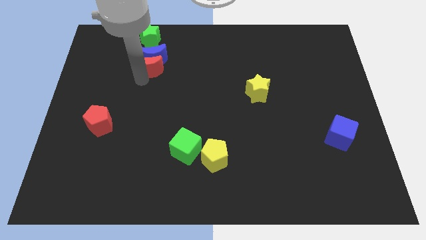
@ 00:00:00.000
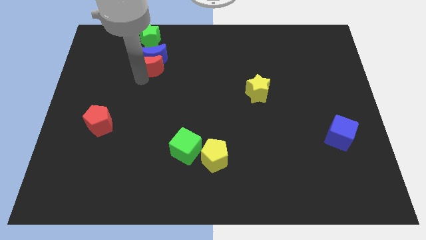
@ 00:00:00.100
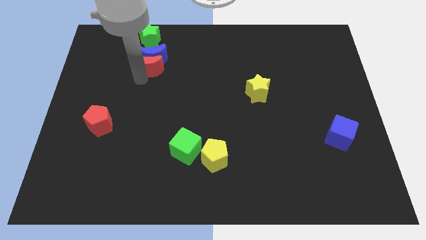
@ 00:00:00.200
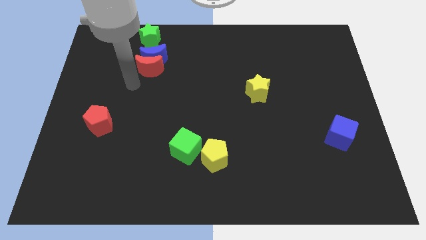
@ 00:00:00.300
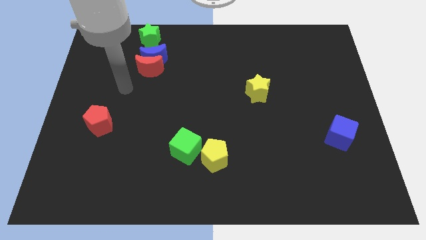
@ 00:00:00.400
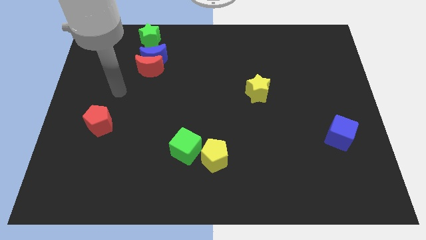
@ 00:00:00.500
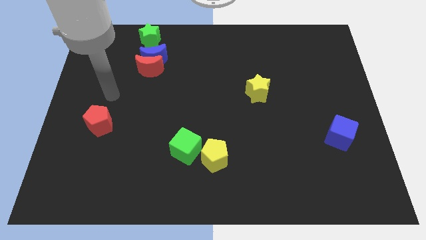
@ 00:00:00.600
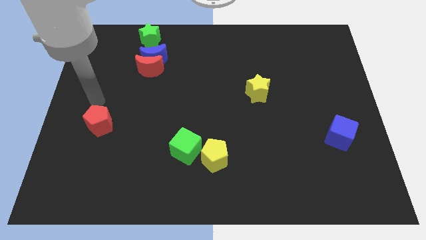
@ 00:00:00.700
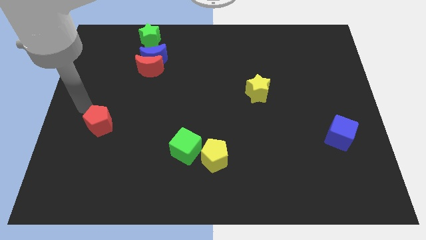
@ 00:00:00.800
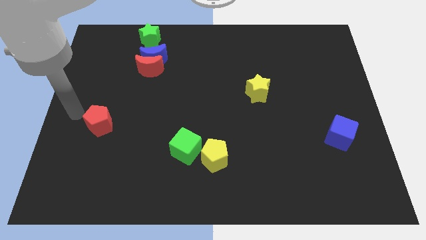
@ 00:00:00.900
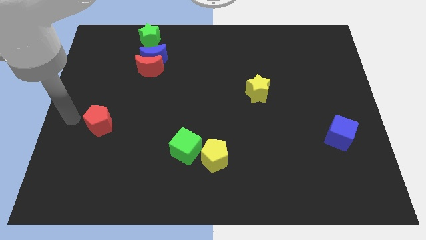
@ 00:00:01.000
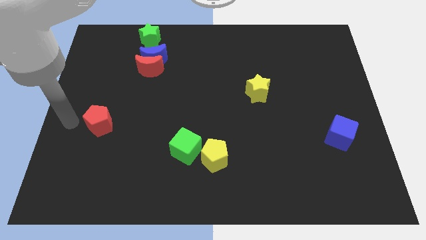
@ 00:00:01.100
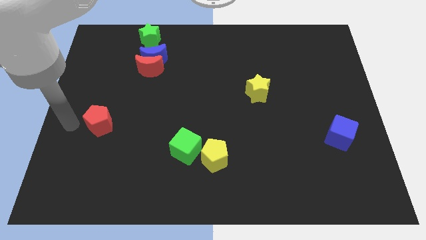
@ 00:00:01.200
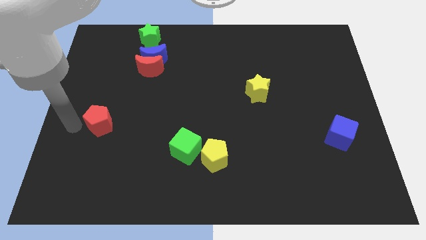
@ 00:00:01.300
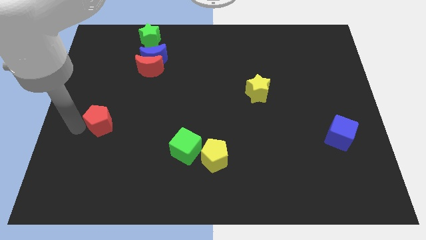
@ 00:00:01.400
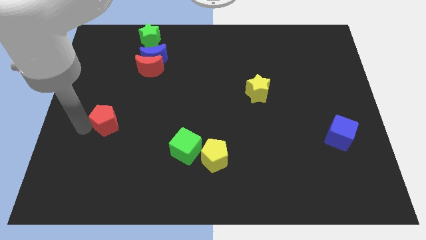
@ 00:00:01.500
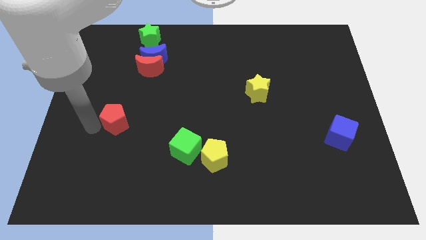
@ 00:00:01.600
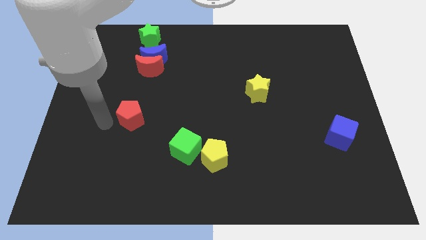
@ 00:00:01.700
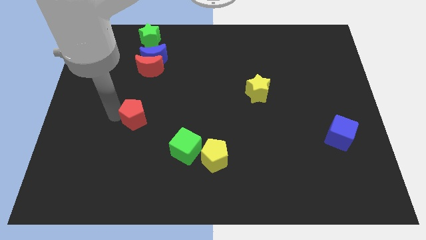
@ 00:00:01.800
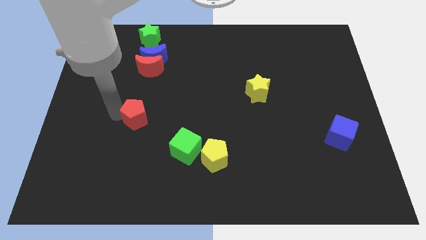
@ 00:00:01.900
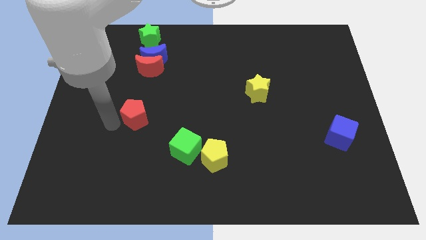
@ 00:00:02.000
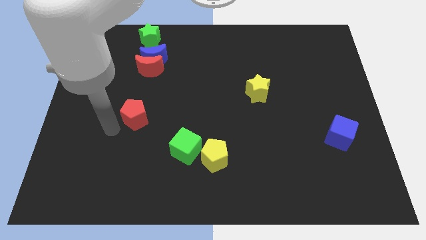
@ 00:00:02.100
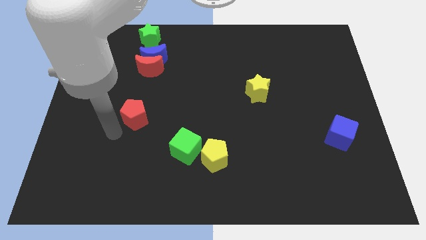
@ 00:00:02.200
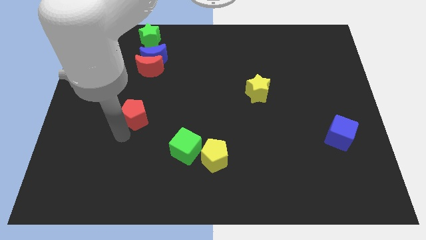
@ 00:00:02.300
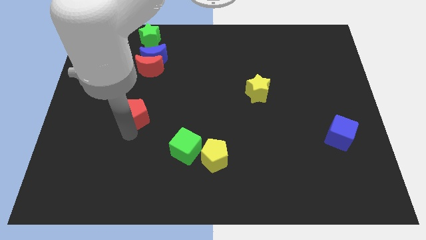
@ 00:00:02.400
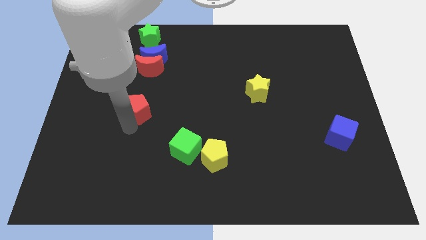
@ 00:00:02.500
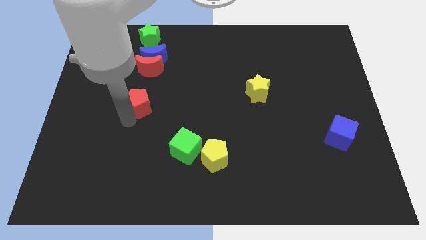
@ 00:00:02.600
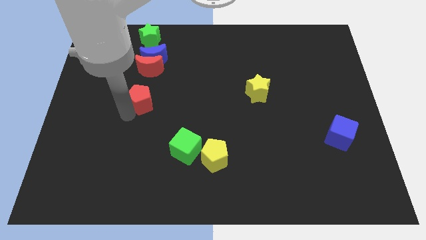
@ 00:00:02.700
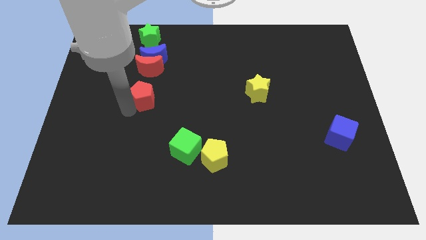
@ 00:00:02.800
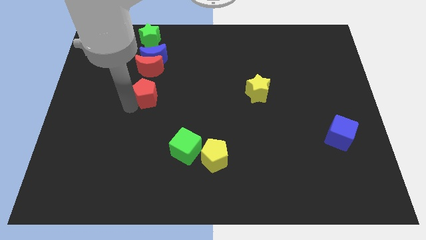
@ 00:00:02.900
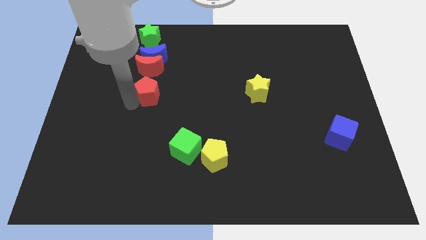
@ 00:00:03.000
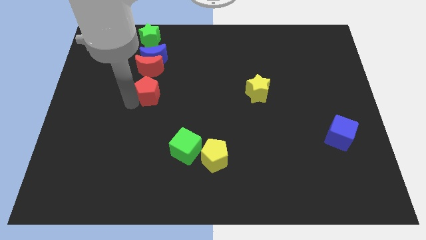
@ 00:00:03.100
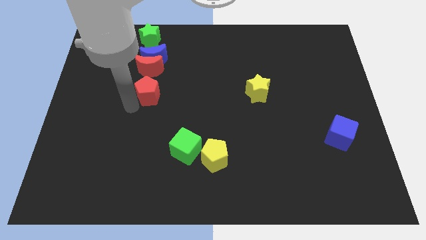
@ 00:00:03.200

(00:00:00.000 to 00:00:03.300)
place the red pentagon below the red moon

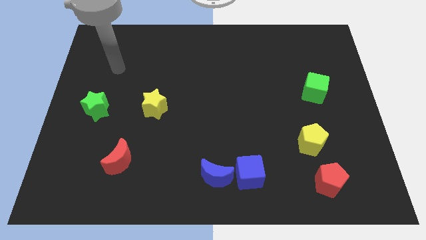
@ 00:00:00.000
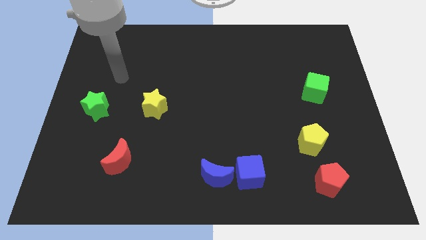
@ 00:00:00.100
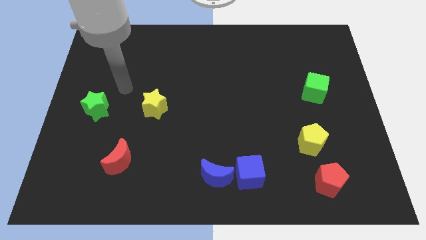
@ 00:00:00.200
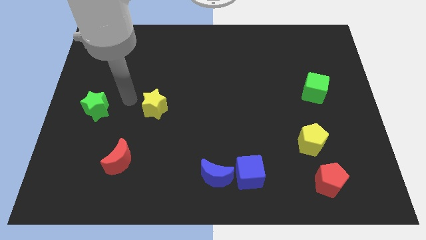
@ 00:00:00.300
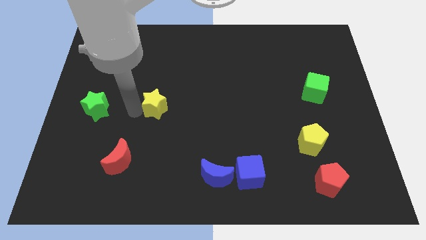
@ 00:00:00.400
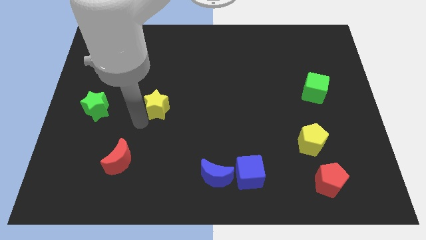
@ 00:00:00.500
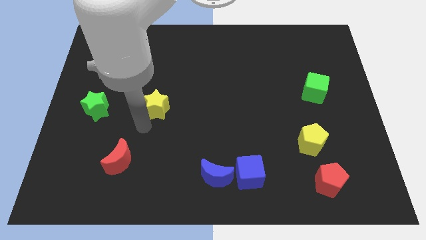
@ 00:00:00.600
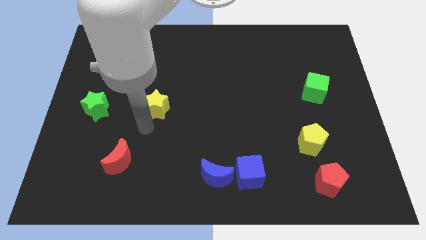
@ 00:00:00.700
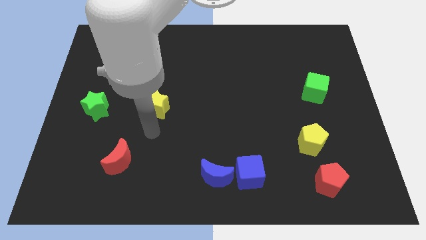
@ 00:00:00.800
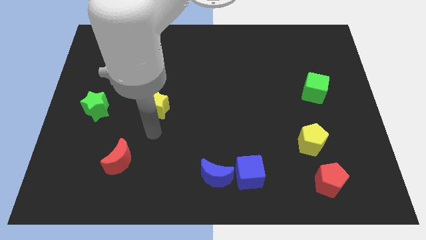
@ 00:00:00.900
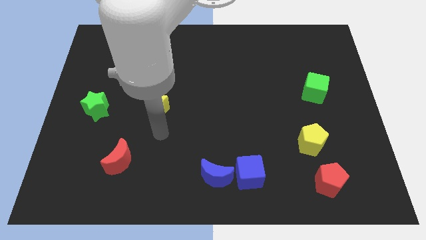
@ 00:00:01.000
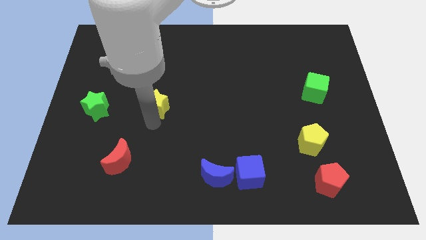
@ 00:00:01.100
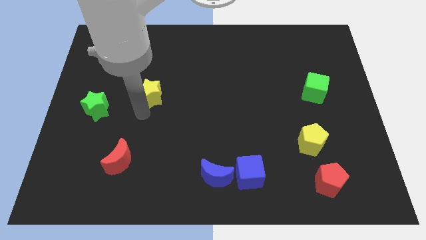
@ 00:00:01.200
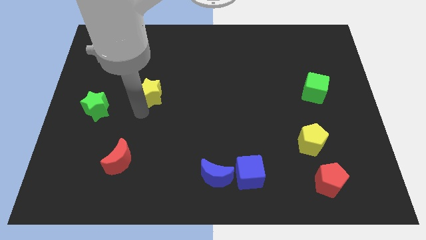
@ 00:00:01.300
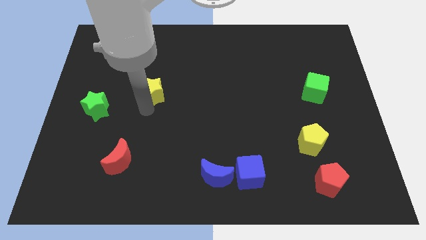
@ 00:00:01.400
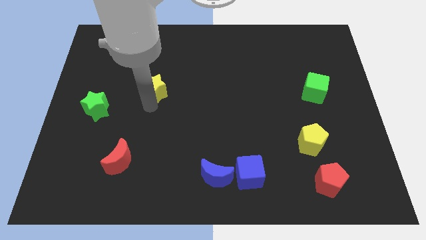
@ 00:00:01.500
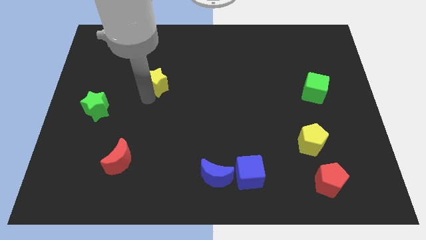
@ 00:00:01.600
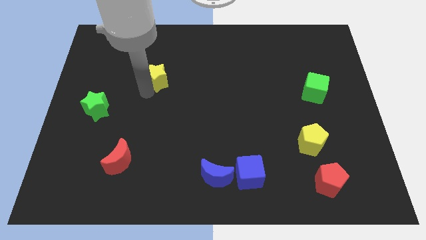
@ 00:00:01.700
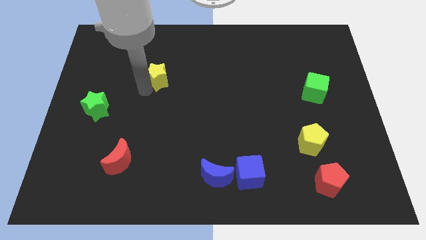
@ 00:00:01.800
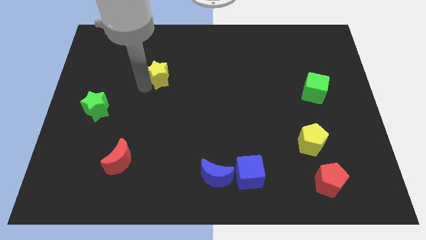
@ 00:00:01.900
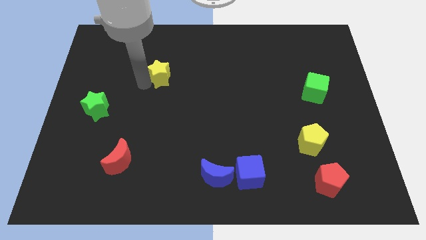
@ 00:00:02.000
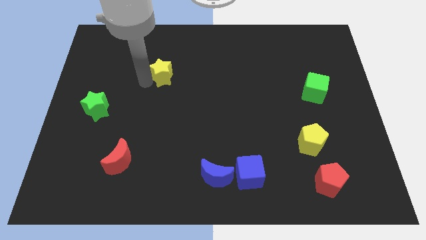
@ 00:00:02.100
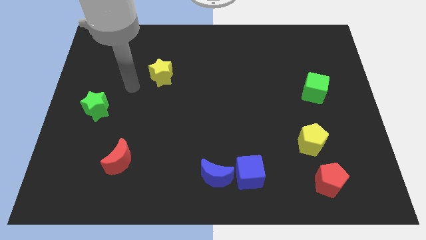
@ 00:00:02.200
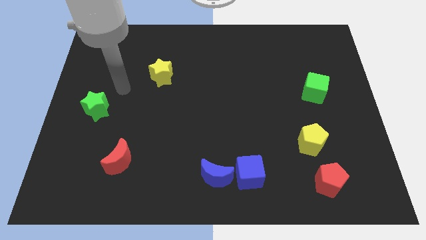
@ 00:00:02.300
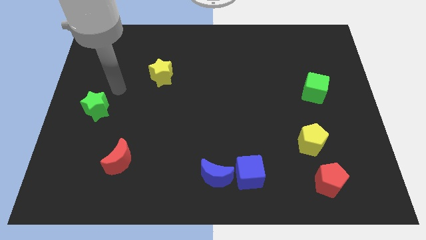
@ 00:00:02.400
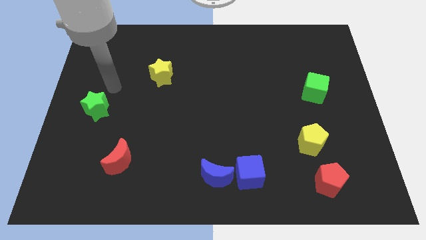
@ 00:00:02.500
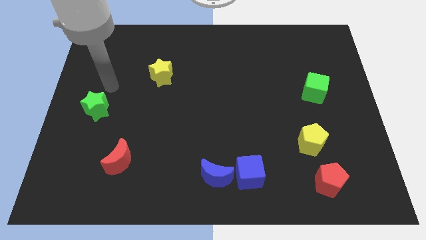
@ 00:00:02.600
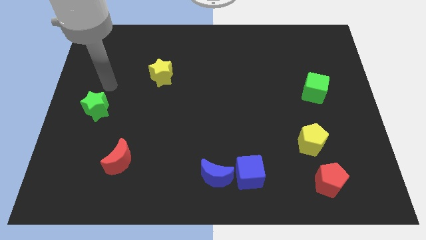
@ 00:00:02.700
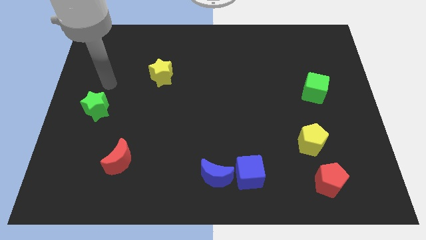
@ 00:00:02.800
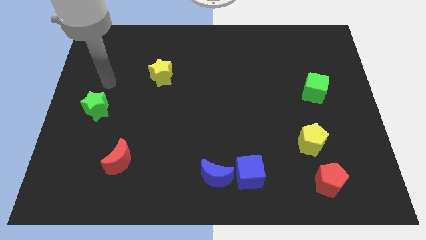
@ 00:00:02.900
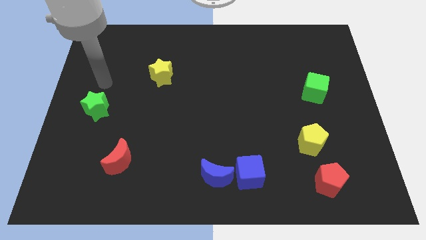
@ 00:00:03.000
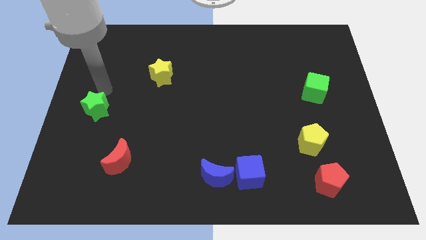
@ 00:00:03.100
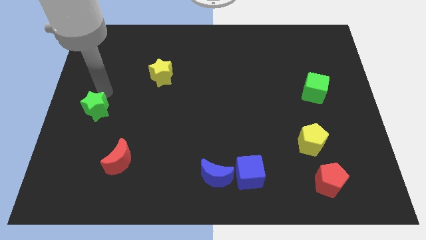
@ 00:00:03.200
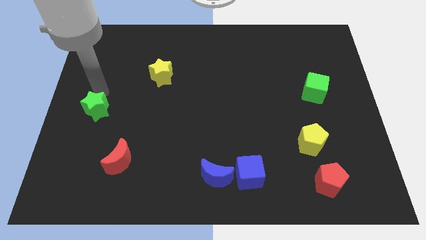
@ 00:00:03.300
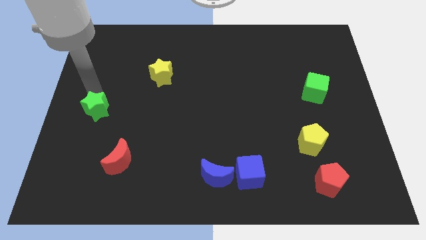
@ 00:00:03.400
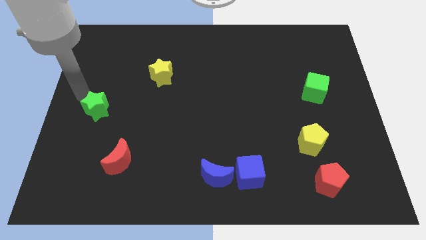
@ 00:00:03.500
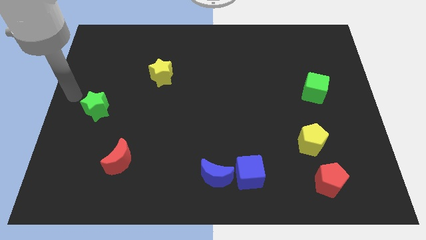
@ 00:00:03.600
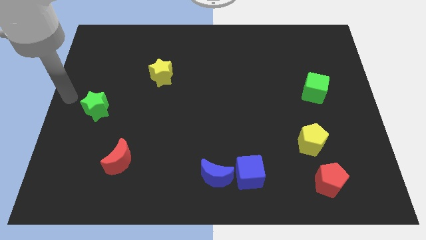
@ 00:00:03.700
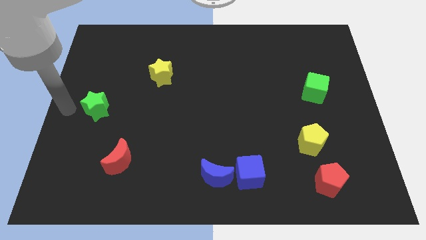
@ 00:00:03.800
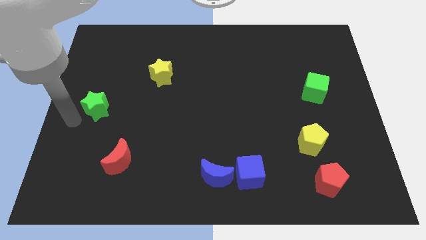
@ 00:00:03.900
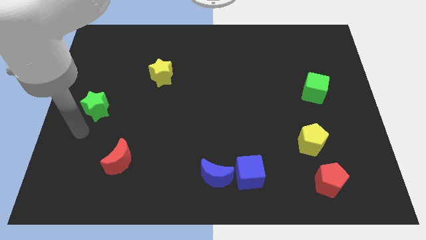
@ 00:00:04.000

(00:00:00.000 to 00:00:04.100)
push the yellow star to the top of the board

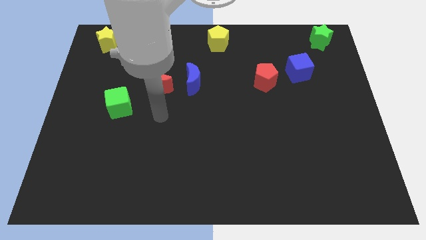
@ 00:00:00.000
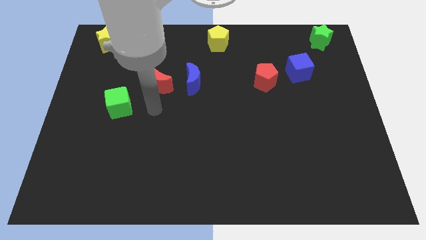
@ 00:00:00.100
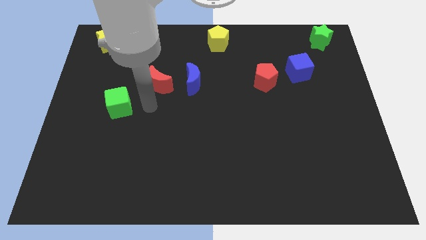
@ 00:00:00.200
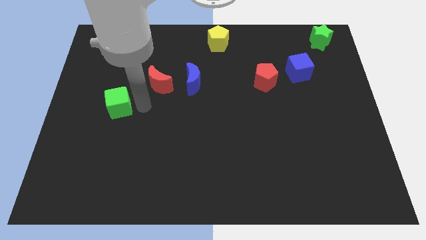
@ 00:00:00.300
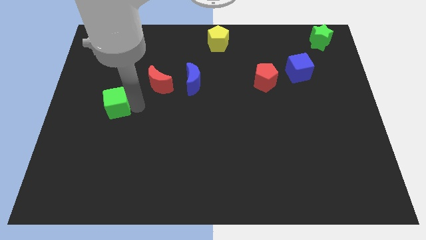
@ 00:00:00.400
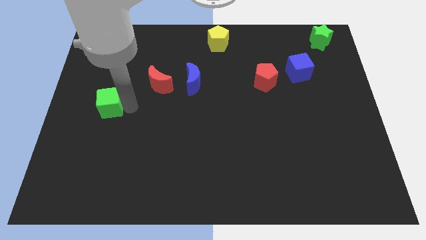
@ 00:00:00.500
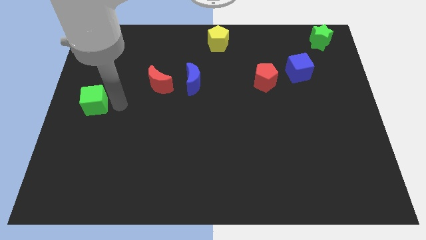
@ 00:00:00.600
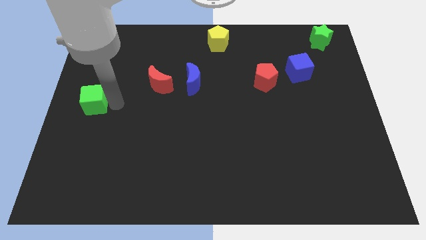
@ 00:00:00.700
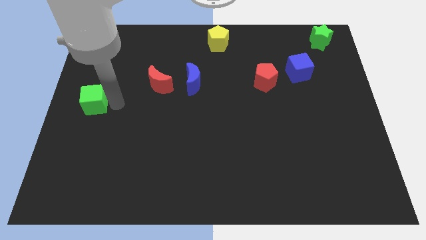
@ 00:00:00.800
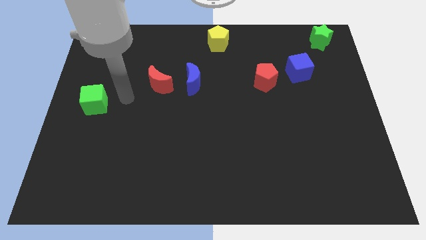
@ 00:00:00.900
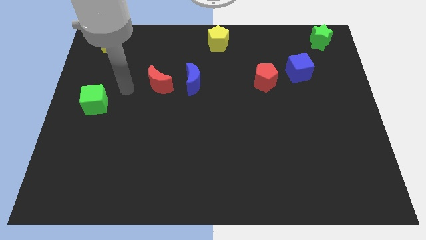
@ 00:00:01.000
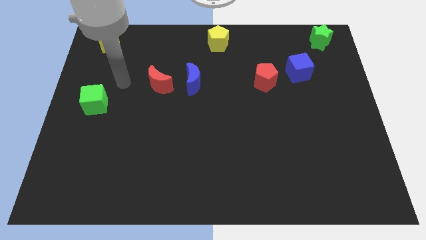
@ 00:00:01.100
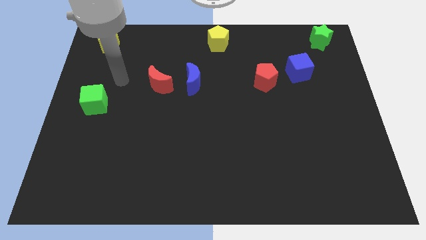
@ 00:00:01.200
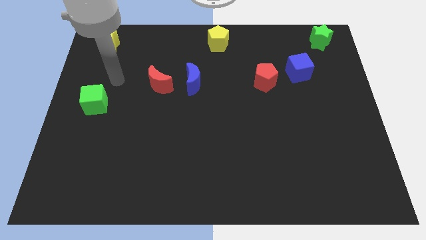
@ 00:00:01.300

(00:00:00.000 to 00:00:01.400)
move the green cube slightly towards the center left side of the board

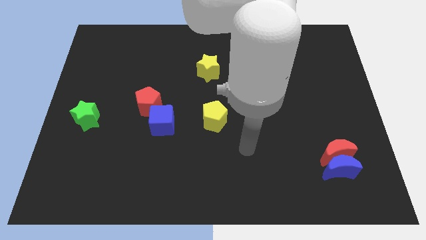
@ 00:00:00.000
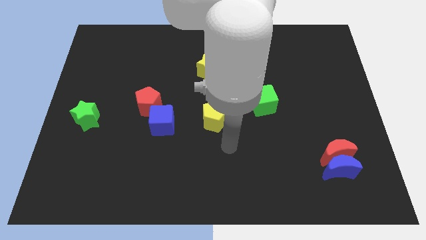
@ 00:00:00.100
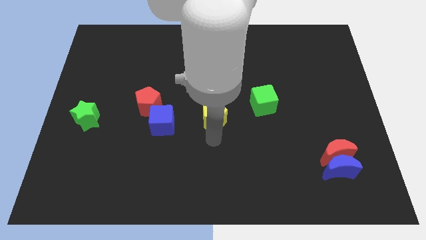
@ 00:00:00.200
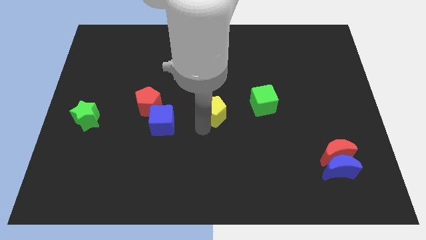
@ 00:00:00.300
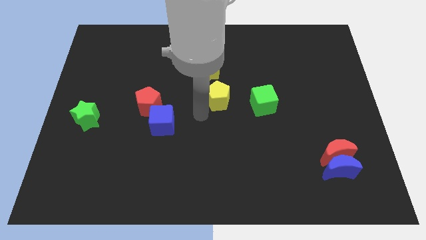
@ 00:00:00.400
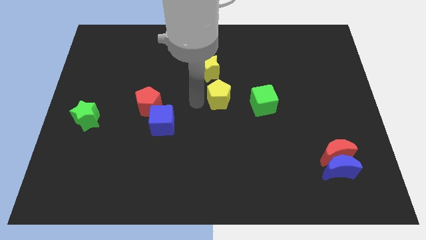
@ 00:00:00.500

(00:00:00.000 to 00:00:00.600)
push yellow pentagon slightly towards up
